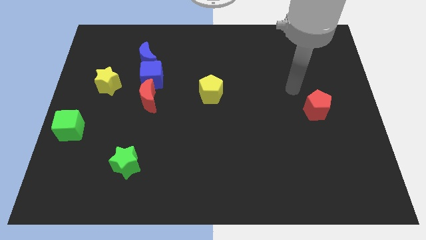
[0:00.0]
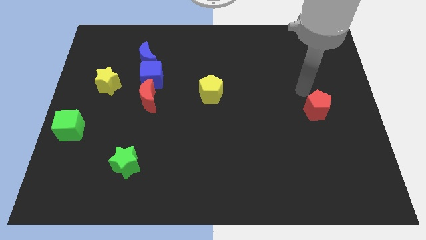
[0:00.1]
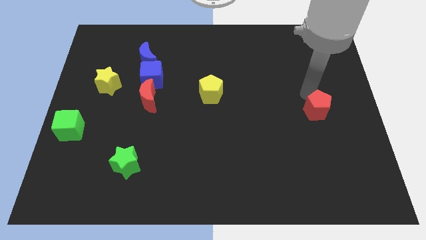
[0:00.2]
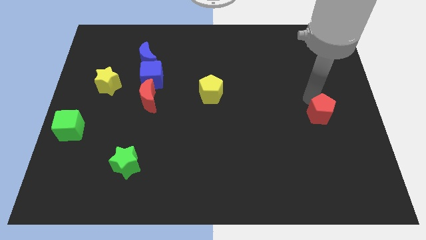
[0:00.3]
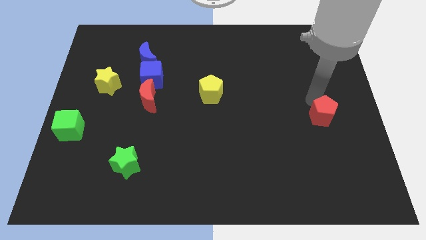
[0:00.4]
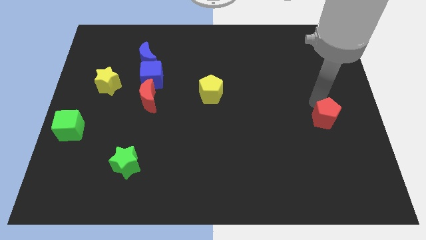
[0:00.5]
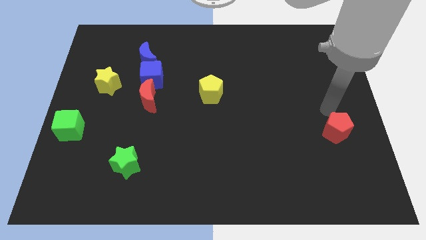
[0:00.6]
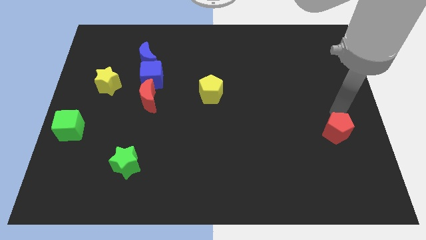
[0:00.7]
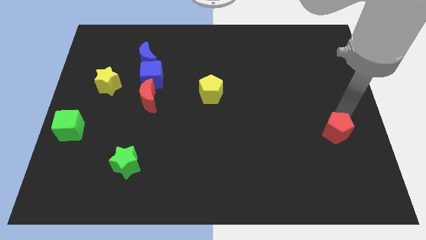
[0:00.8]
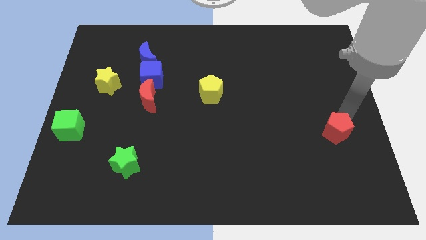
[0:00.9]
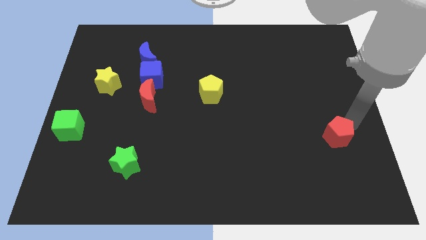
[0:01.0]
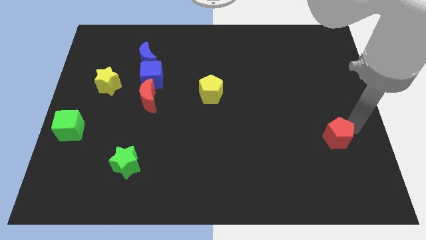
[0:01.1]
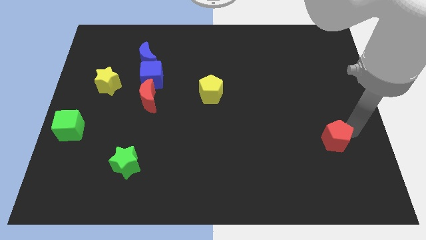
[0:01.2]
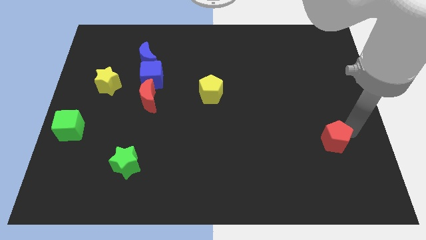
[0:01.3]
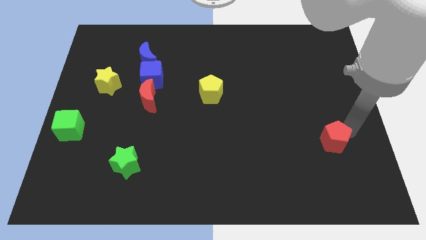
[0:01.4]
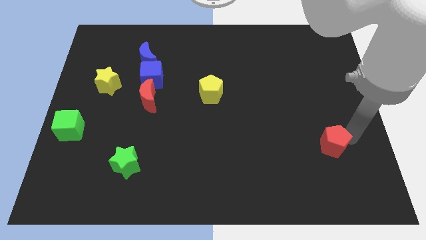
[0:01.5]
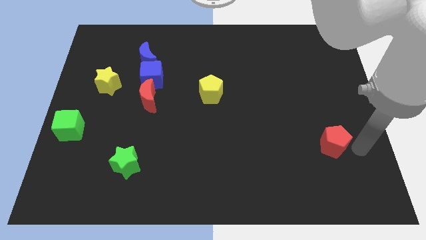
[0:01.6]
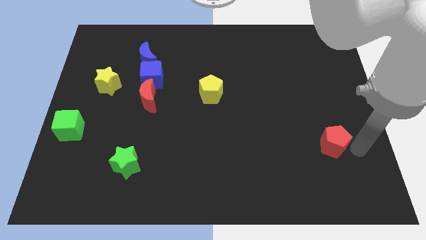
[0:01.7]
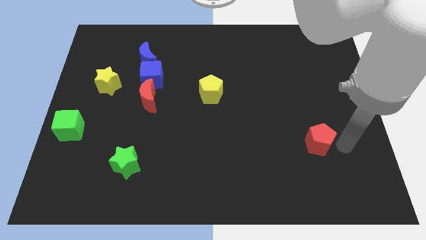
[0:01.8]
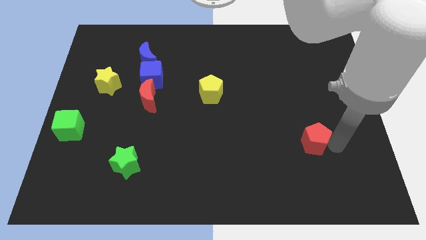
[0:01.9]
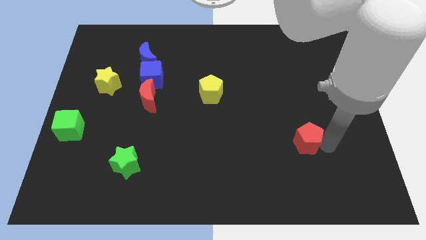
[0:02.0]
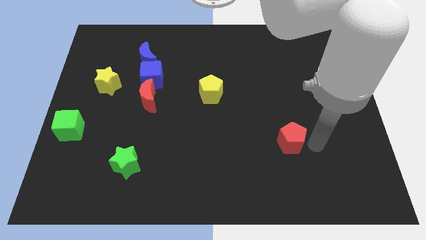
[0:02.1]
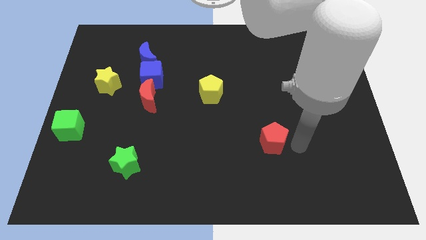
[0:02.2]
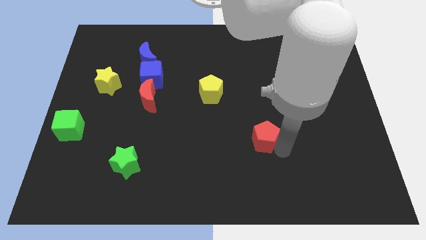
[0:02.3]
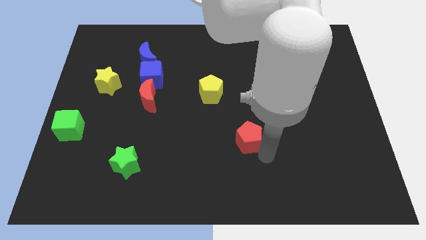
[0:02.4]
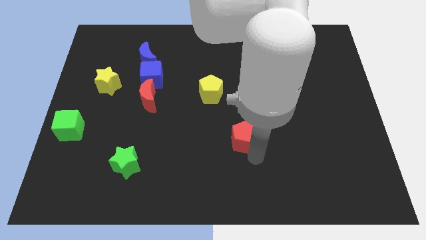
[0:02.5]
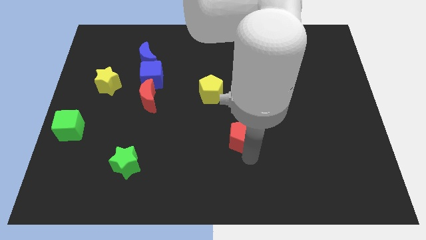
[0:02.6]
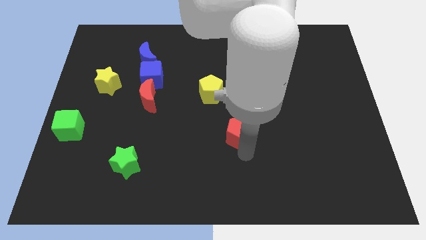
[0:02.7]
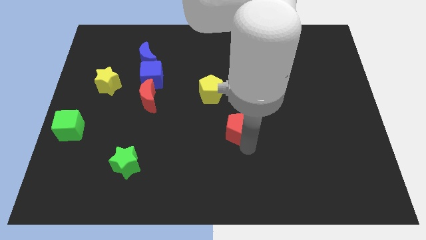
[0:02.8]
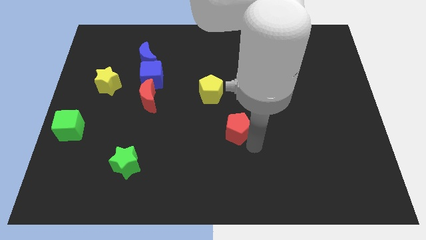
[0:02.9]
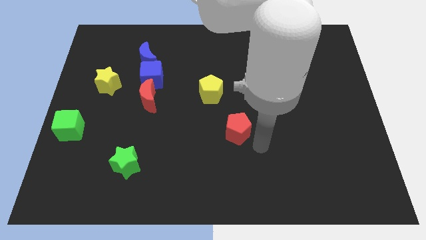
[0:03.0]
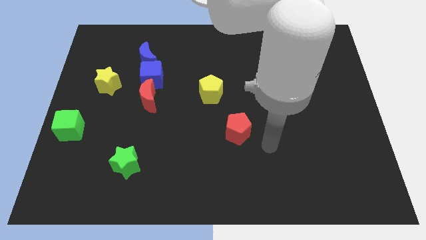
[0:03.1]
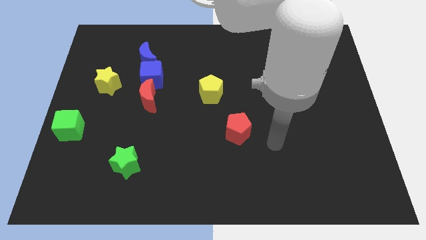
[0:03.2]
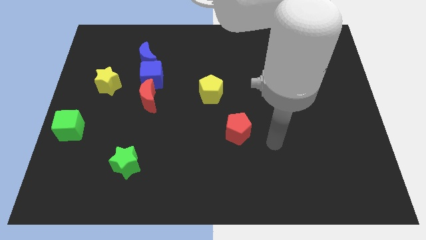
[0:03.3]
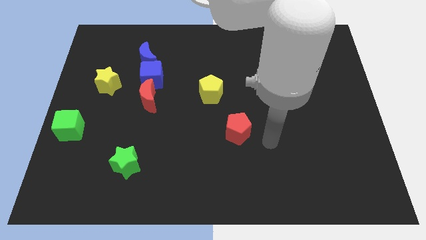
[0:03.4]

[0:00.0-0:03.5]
move the red pentagon to the center

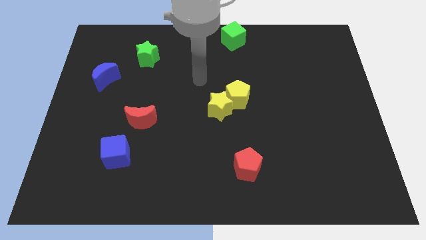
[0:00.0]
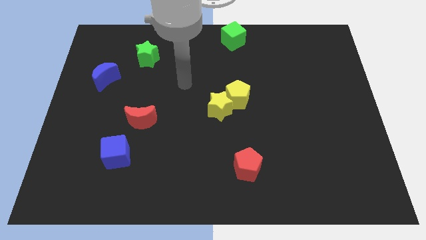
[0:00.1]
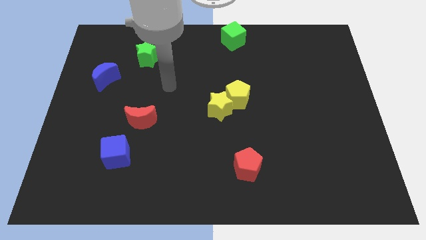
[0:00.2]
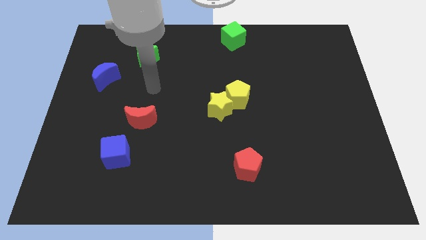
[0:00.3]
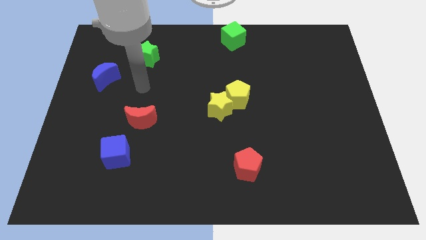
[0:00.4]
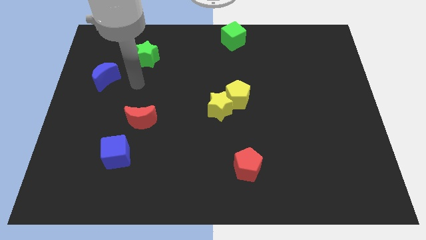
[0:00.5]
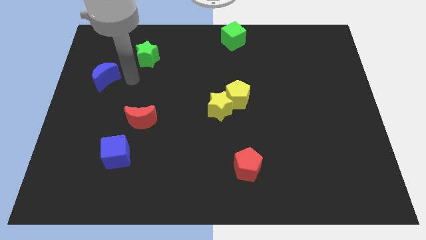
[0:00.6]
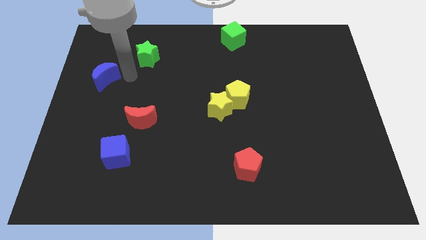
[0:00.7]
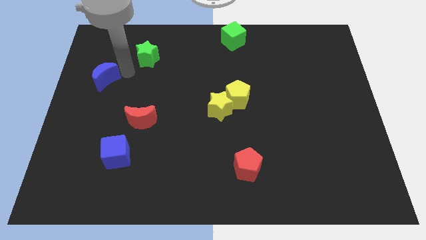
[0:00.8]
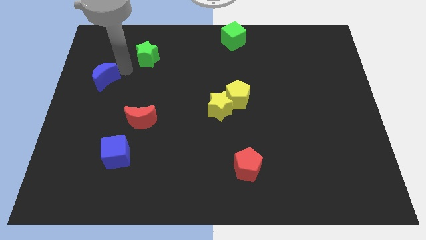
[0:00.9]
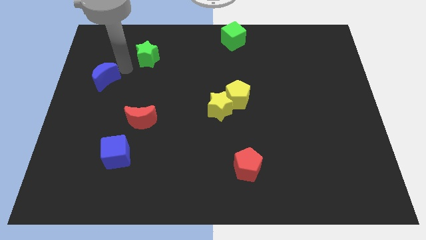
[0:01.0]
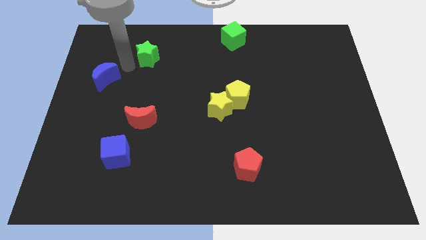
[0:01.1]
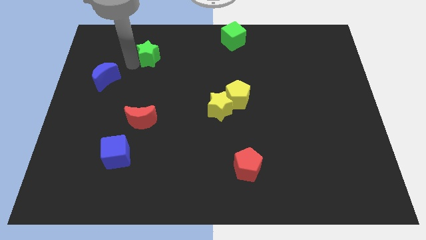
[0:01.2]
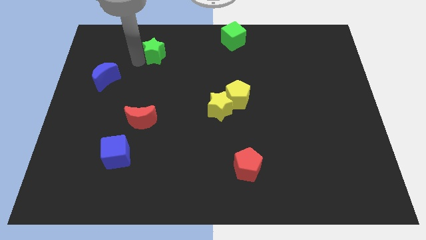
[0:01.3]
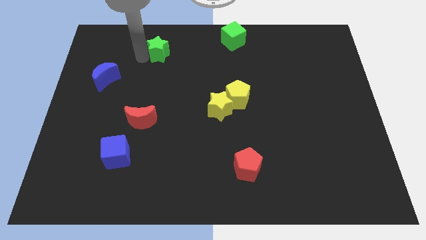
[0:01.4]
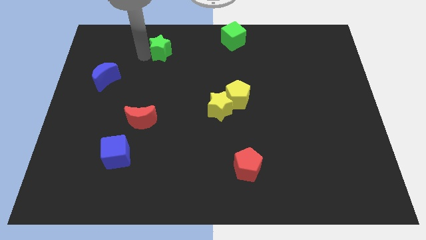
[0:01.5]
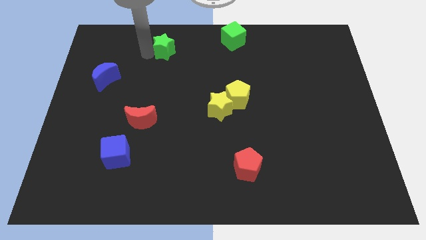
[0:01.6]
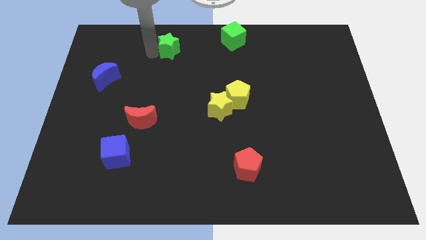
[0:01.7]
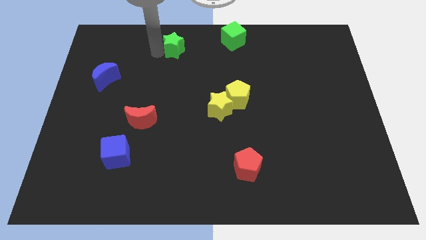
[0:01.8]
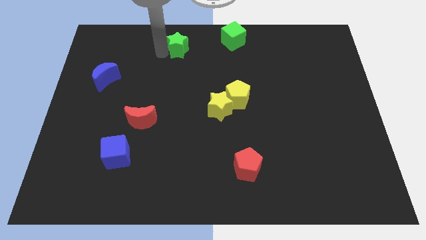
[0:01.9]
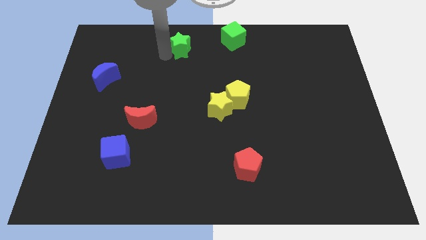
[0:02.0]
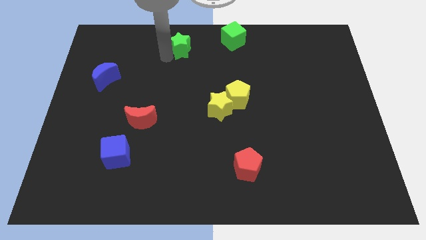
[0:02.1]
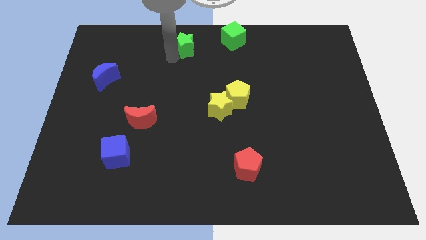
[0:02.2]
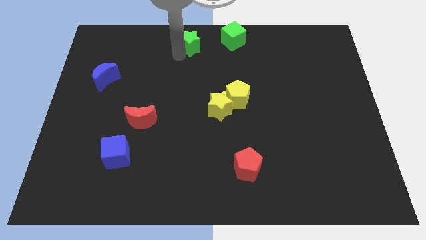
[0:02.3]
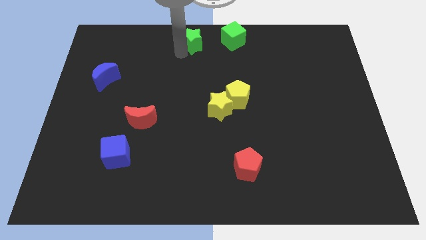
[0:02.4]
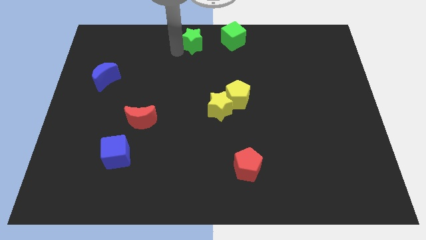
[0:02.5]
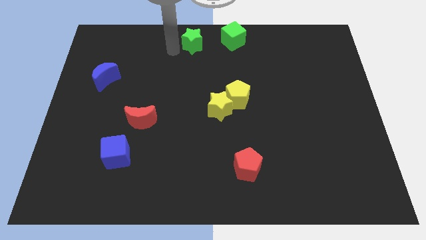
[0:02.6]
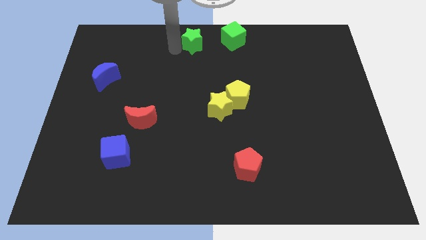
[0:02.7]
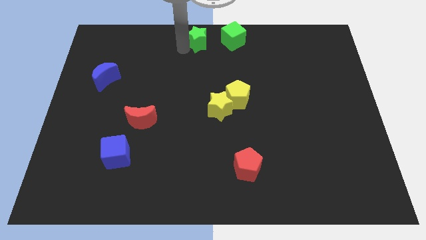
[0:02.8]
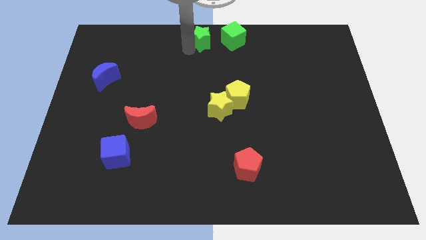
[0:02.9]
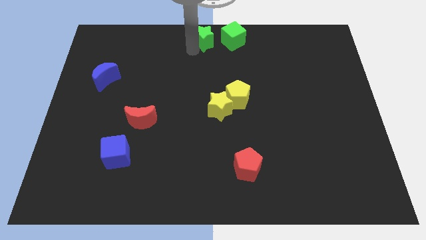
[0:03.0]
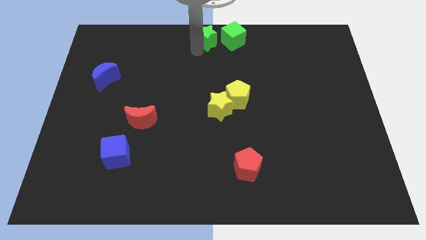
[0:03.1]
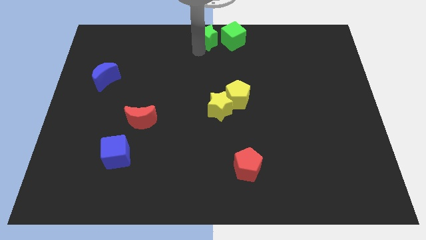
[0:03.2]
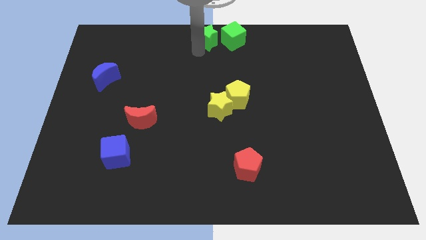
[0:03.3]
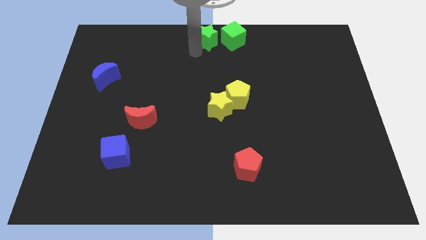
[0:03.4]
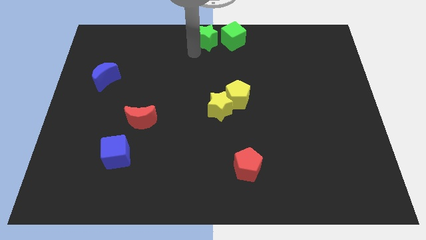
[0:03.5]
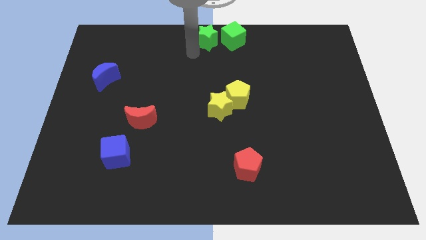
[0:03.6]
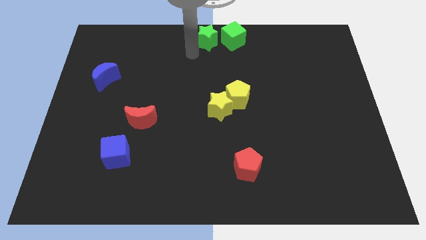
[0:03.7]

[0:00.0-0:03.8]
put the green star at the left side of the green cube

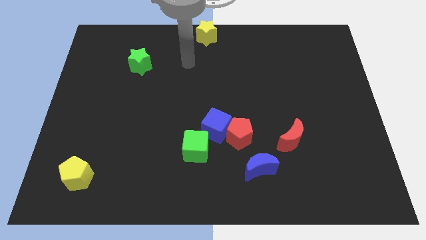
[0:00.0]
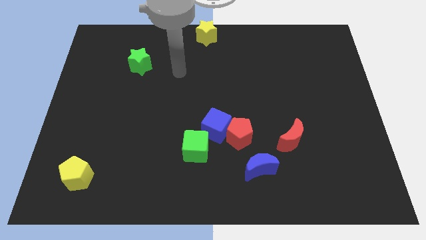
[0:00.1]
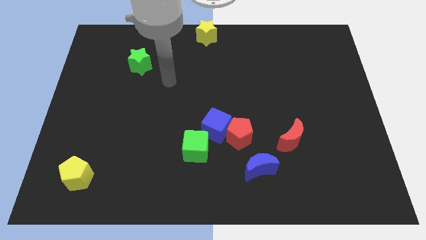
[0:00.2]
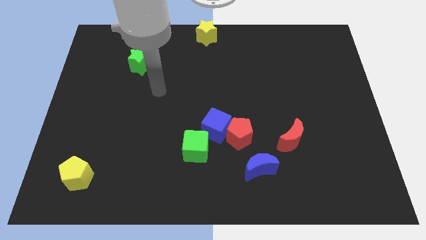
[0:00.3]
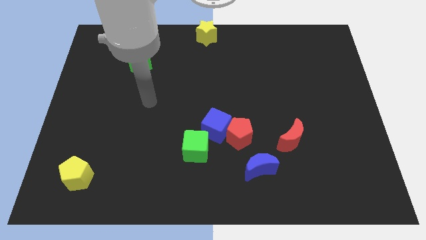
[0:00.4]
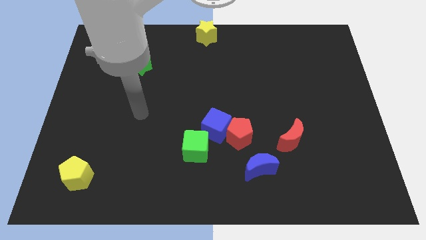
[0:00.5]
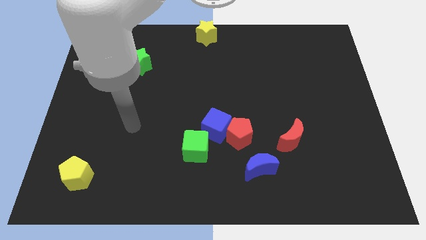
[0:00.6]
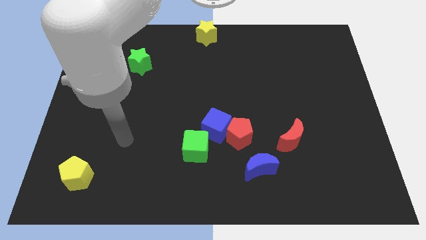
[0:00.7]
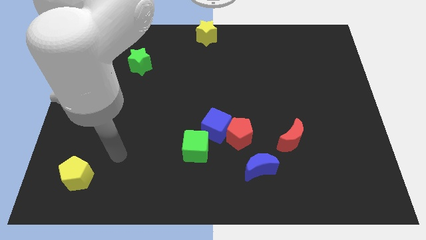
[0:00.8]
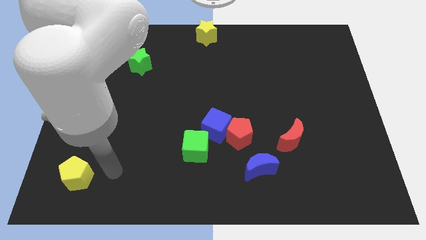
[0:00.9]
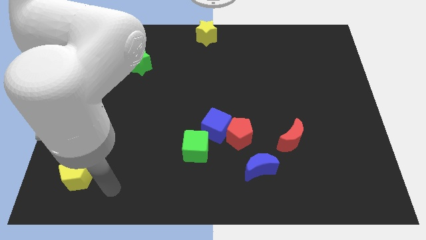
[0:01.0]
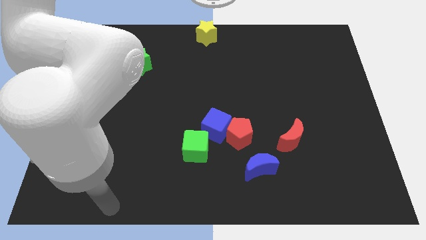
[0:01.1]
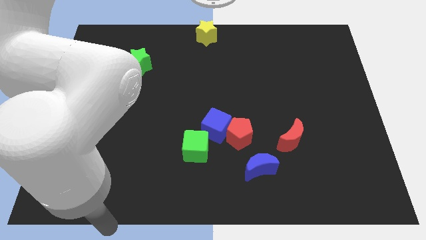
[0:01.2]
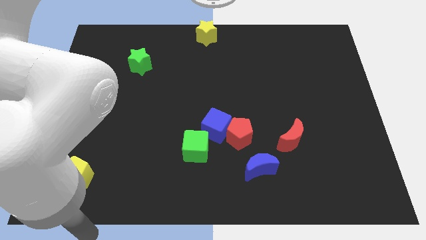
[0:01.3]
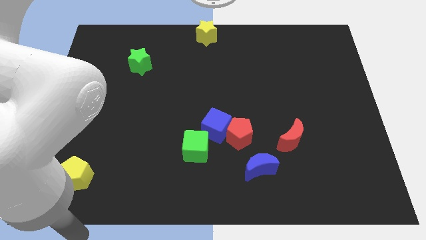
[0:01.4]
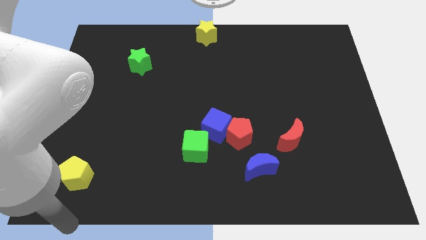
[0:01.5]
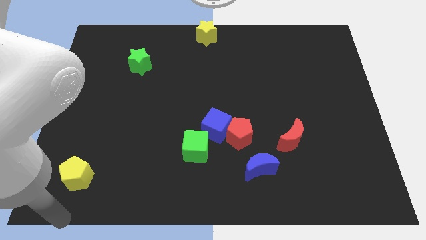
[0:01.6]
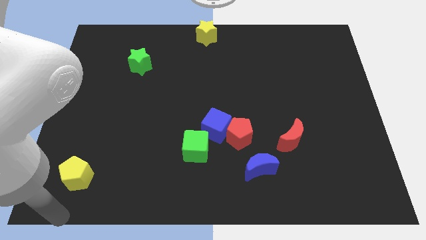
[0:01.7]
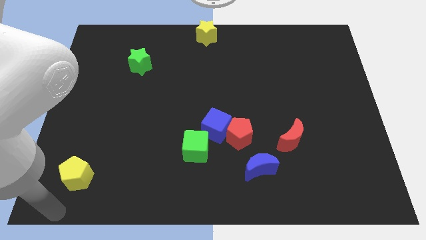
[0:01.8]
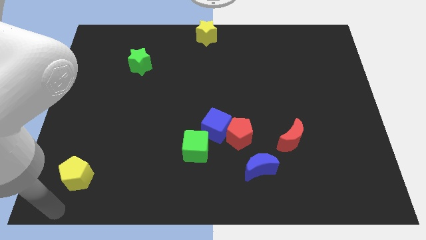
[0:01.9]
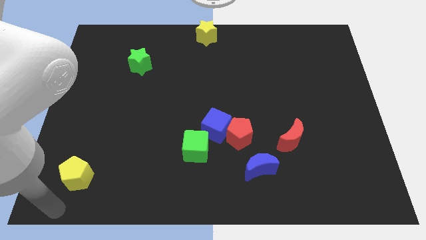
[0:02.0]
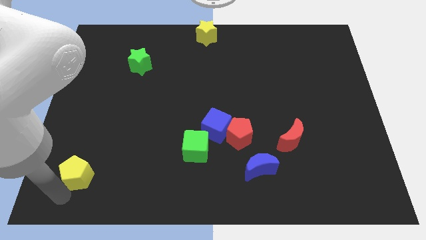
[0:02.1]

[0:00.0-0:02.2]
move yourself away from the yellow star
